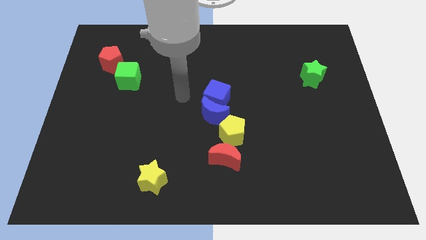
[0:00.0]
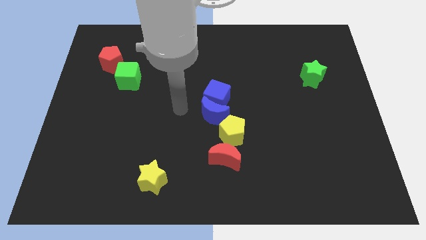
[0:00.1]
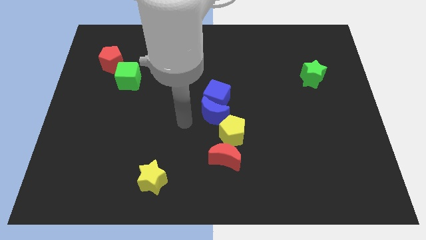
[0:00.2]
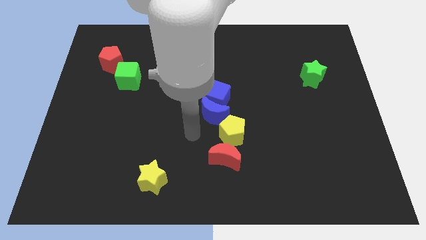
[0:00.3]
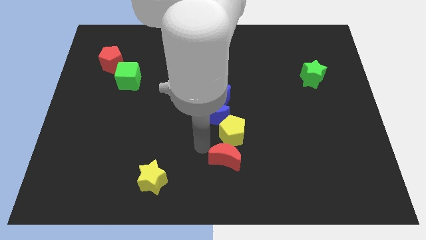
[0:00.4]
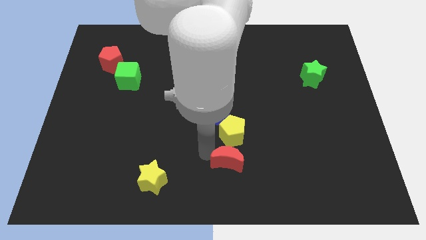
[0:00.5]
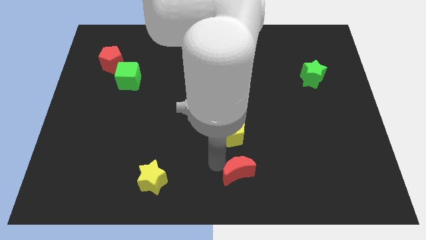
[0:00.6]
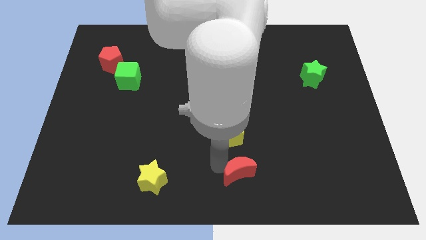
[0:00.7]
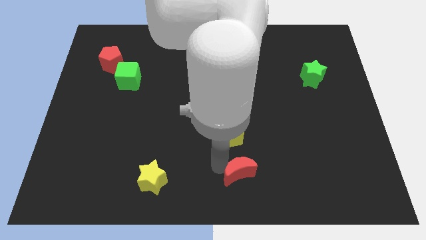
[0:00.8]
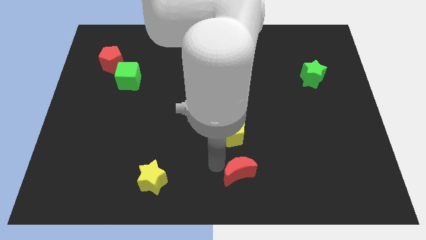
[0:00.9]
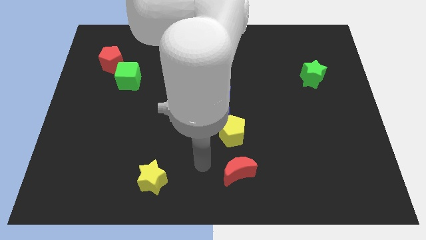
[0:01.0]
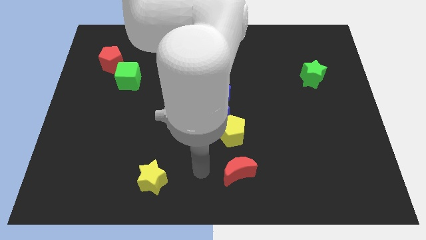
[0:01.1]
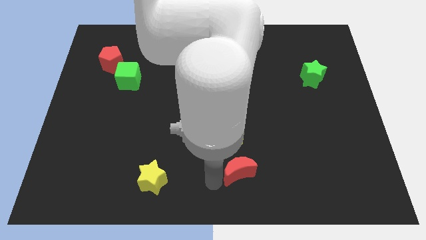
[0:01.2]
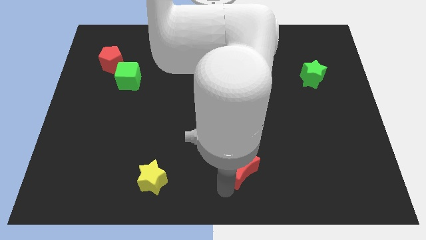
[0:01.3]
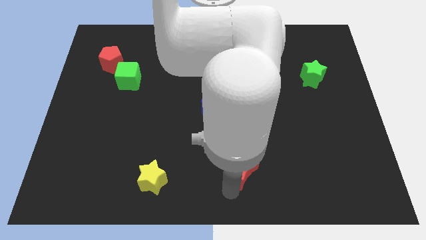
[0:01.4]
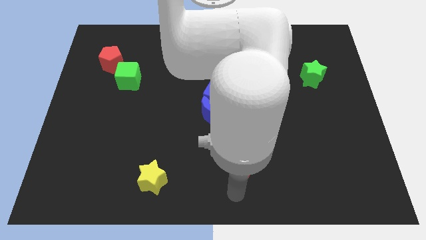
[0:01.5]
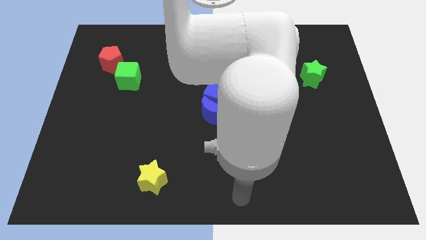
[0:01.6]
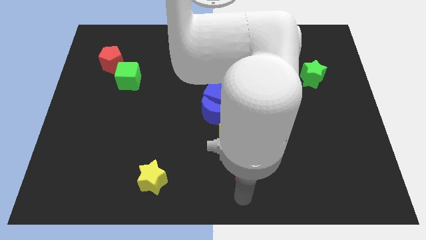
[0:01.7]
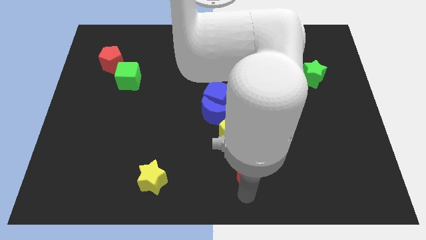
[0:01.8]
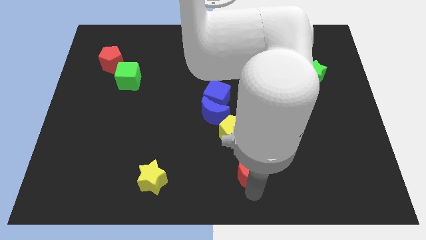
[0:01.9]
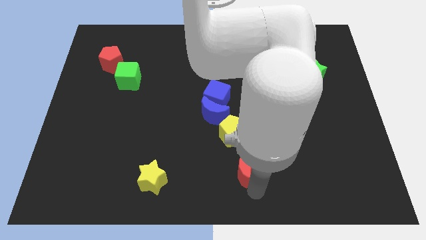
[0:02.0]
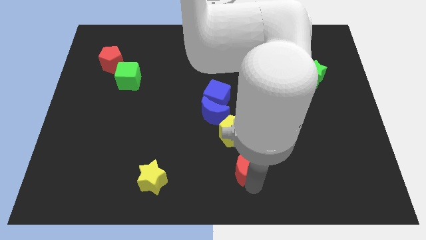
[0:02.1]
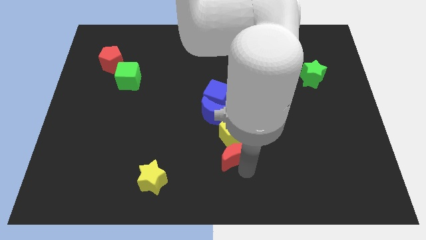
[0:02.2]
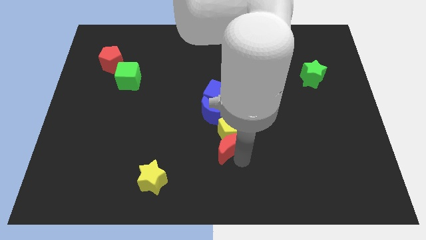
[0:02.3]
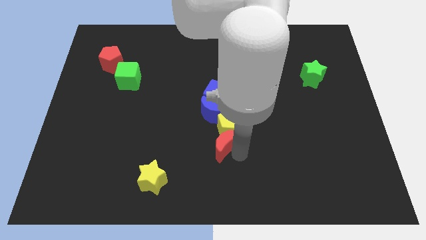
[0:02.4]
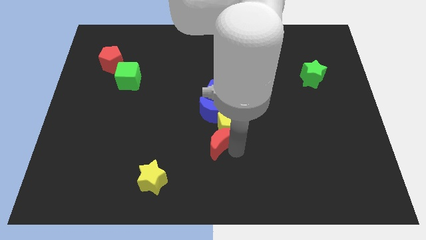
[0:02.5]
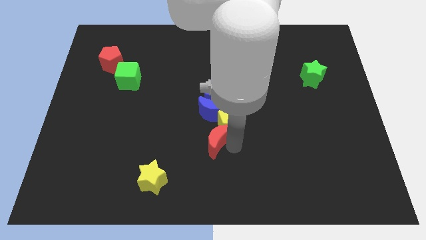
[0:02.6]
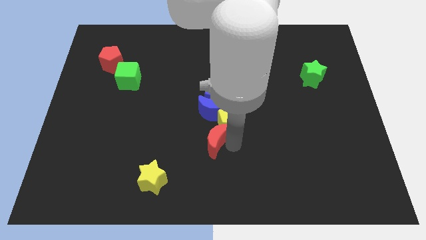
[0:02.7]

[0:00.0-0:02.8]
push the red crescent into the yellow pentagon at the bottom

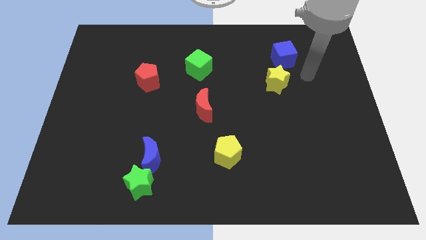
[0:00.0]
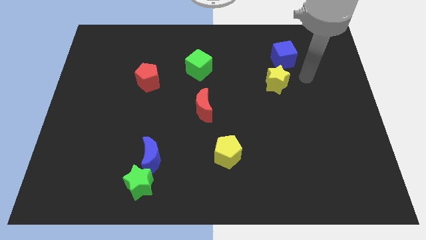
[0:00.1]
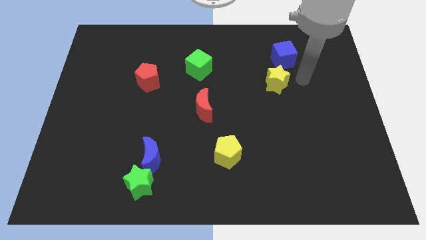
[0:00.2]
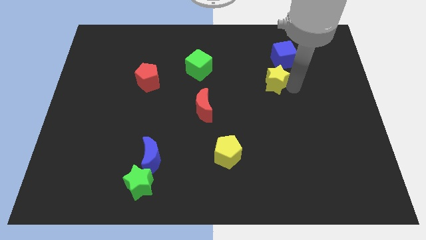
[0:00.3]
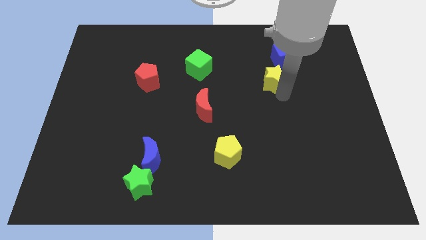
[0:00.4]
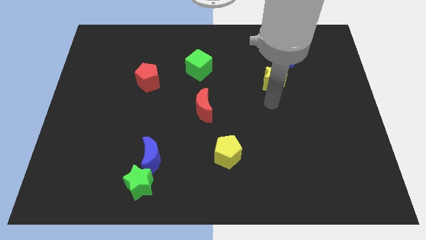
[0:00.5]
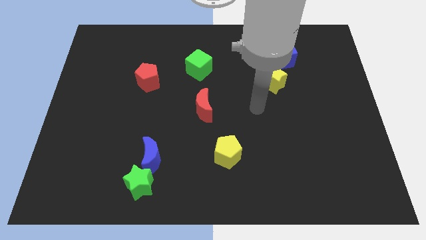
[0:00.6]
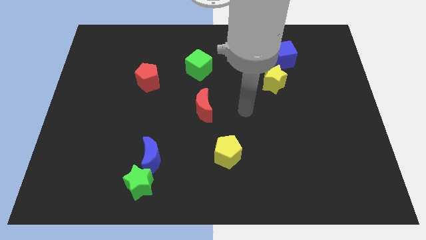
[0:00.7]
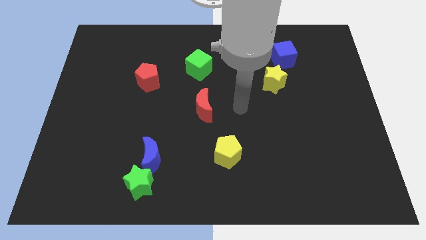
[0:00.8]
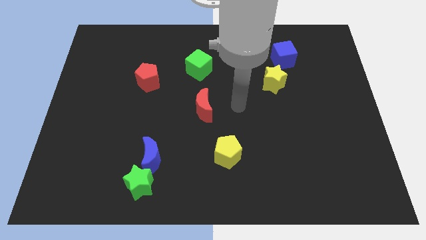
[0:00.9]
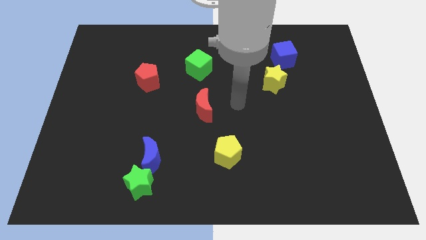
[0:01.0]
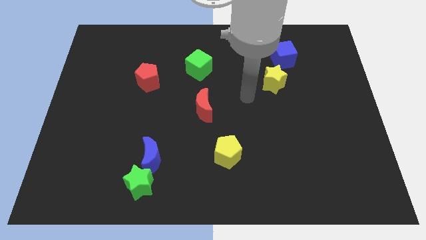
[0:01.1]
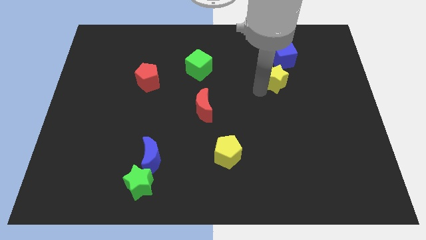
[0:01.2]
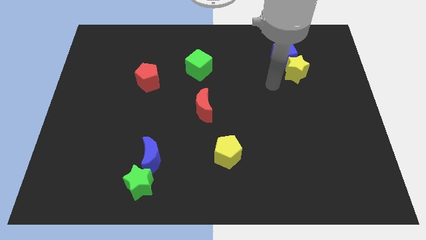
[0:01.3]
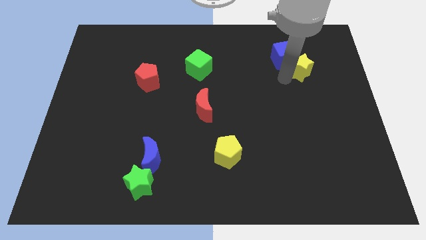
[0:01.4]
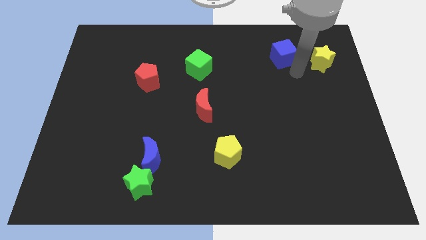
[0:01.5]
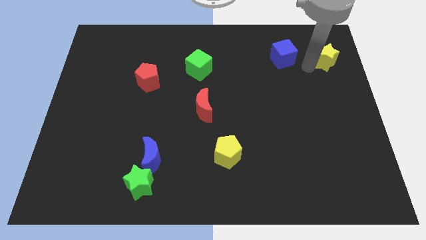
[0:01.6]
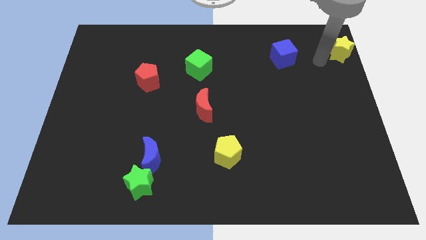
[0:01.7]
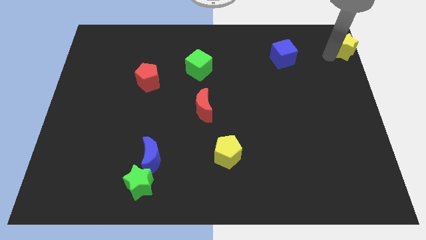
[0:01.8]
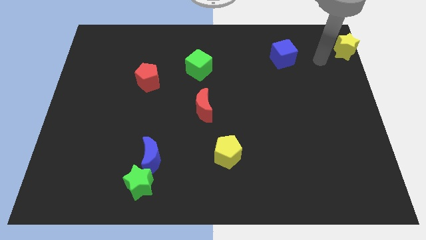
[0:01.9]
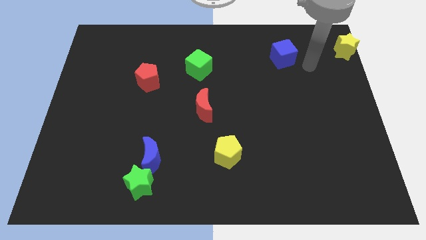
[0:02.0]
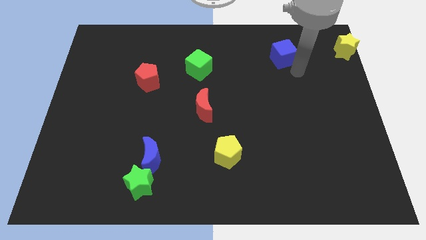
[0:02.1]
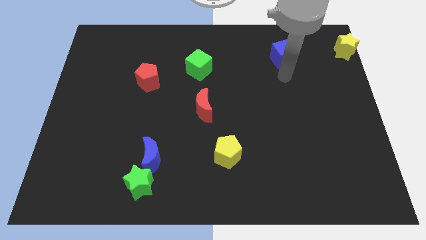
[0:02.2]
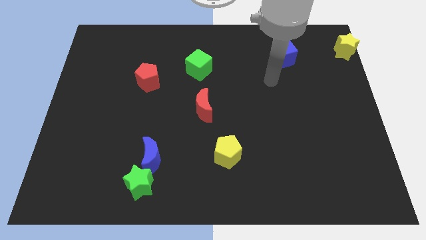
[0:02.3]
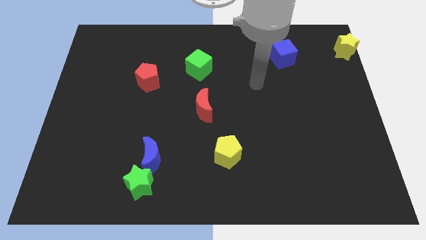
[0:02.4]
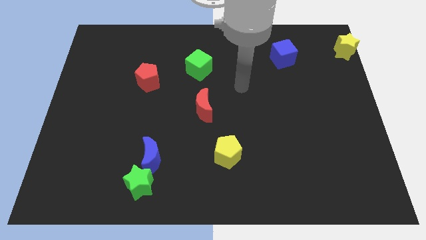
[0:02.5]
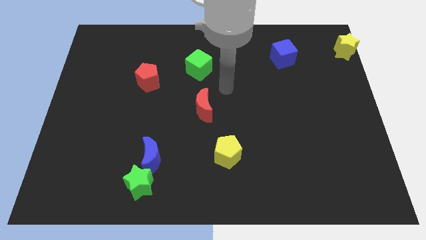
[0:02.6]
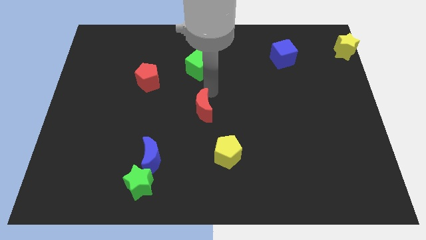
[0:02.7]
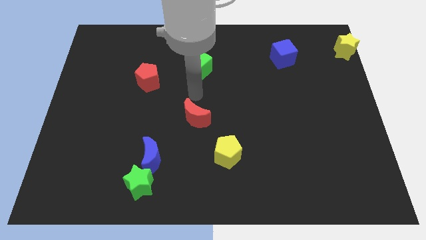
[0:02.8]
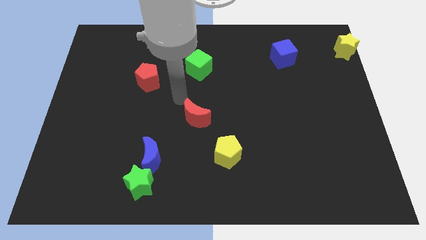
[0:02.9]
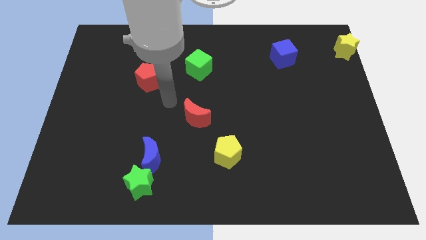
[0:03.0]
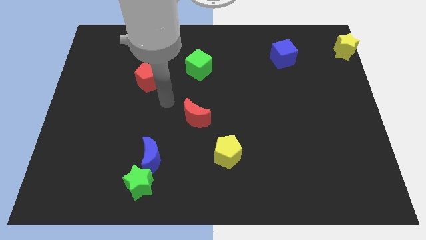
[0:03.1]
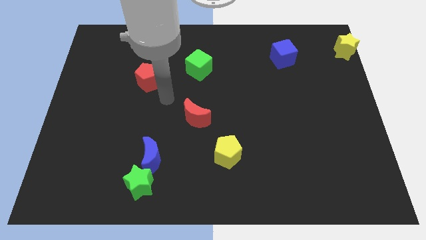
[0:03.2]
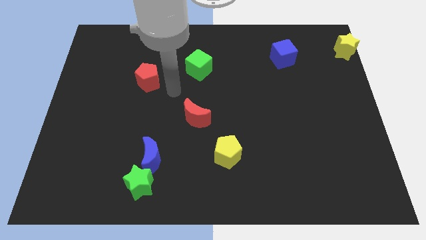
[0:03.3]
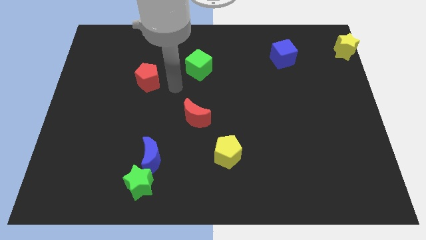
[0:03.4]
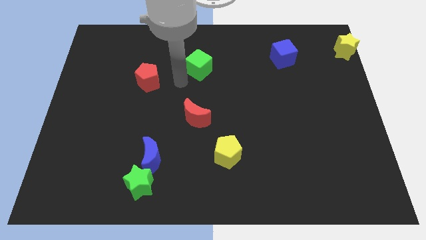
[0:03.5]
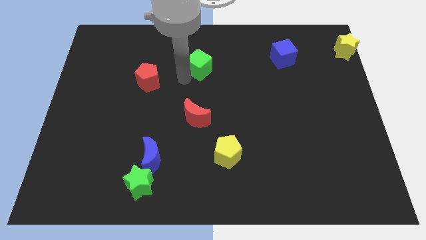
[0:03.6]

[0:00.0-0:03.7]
move the yellow star to the top right corner of the board

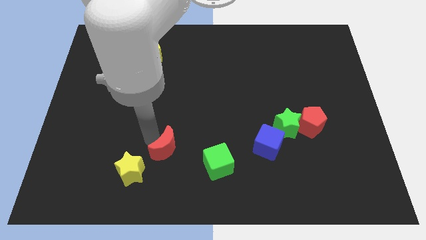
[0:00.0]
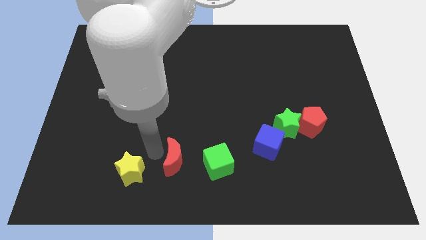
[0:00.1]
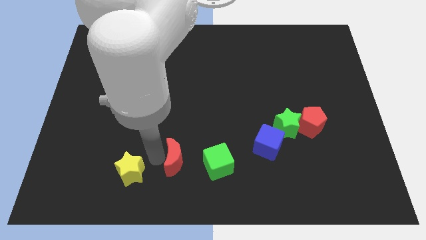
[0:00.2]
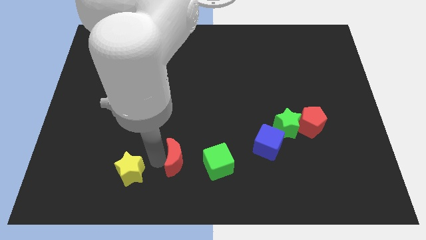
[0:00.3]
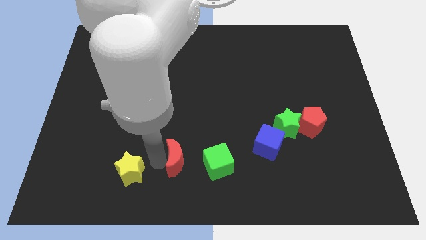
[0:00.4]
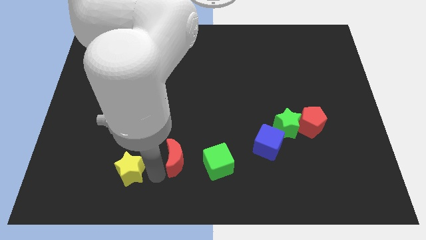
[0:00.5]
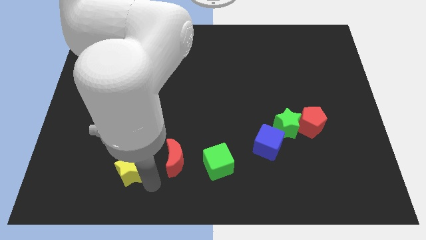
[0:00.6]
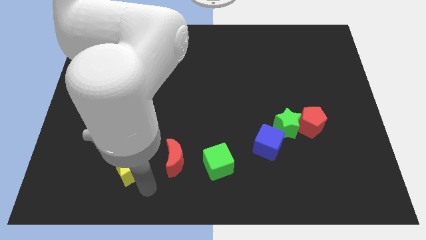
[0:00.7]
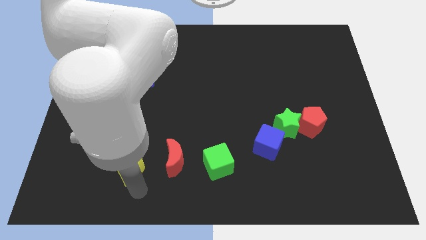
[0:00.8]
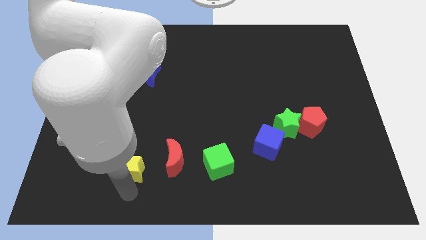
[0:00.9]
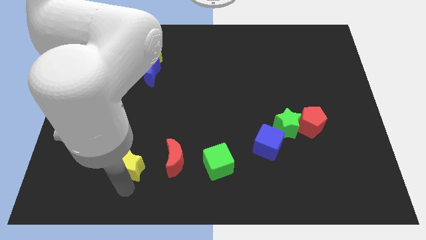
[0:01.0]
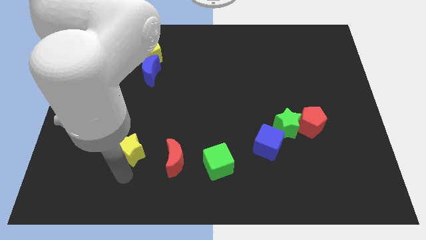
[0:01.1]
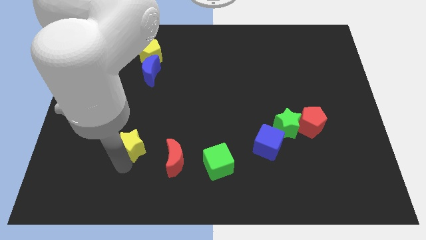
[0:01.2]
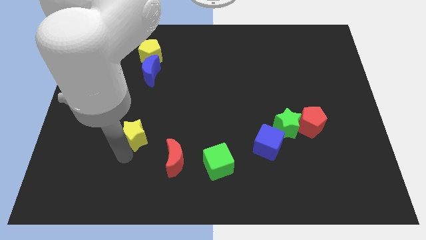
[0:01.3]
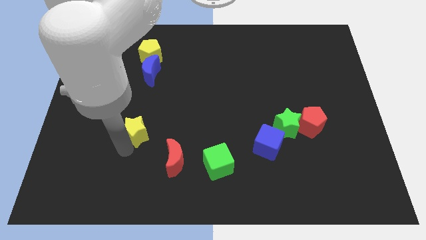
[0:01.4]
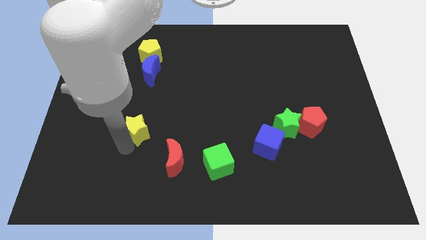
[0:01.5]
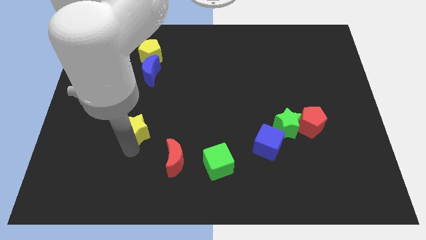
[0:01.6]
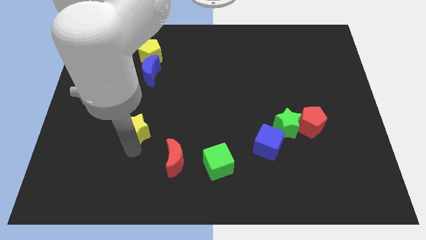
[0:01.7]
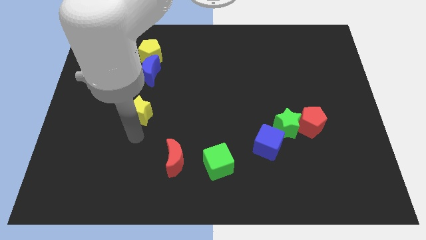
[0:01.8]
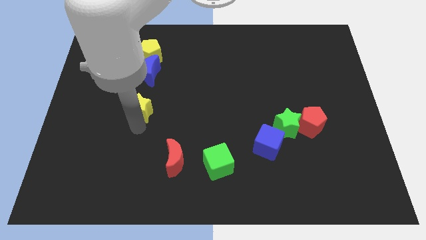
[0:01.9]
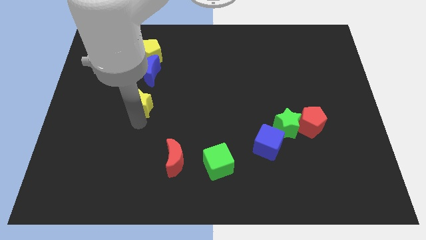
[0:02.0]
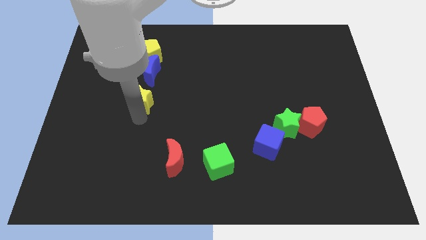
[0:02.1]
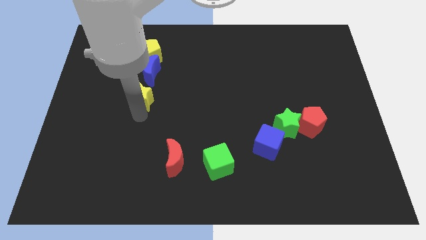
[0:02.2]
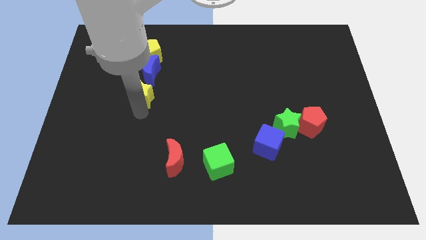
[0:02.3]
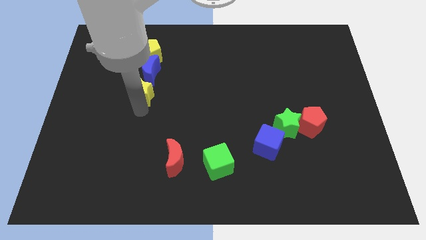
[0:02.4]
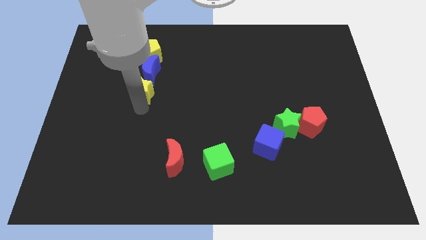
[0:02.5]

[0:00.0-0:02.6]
move the yellow star below to the blue moon
